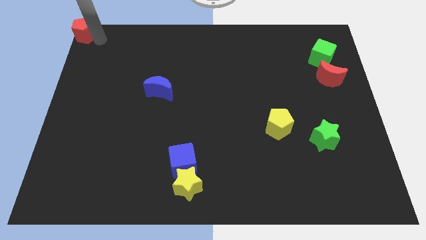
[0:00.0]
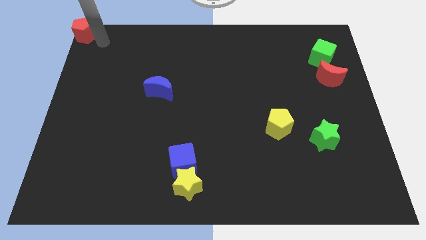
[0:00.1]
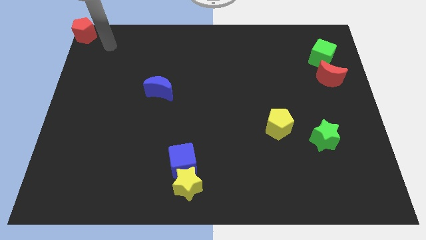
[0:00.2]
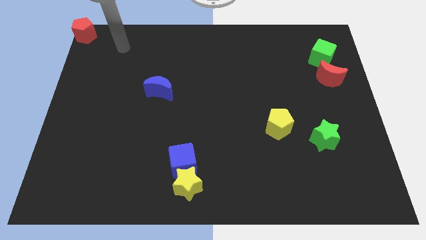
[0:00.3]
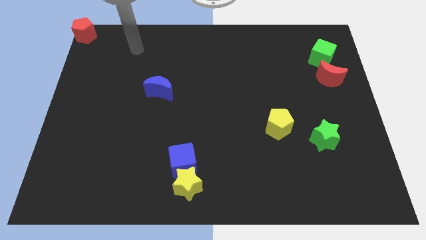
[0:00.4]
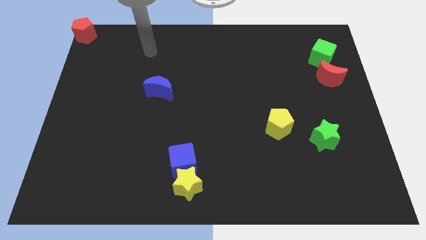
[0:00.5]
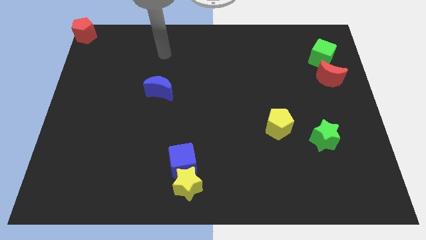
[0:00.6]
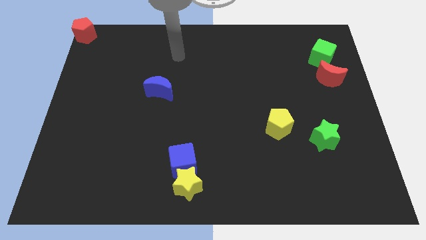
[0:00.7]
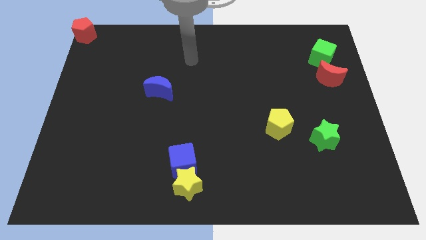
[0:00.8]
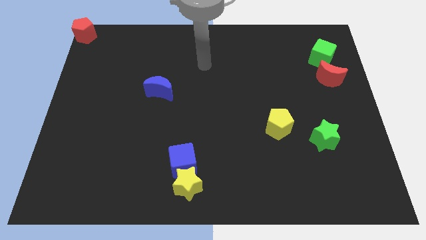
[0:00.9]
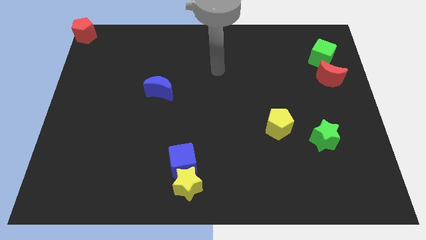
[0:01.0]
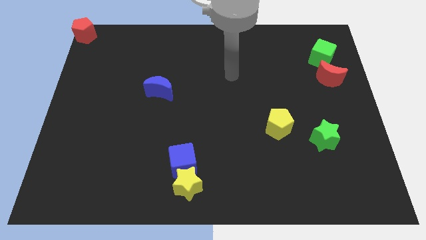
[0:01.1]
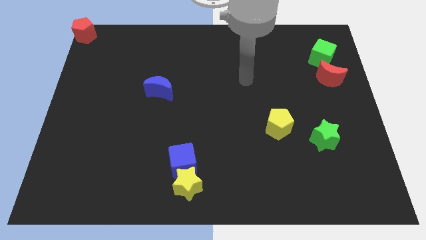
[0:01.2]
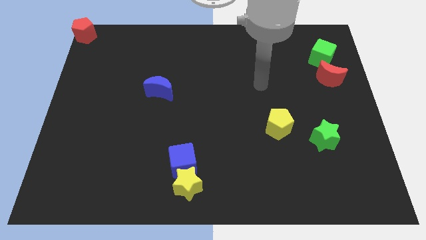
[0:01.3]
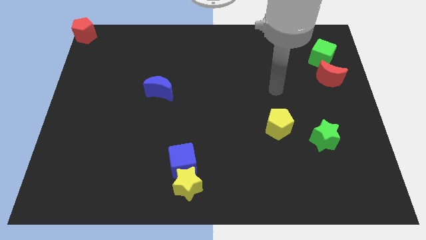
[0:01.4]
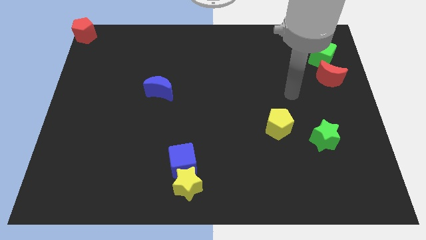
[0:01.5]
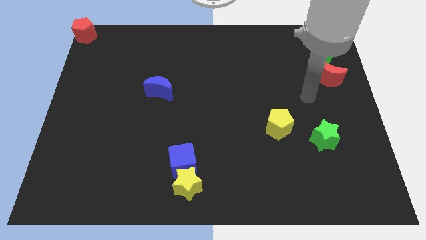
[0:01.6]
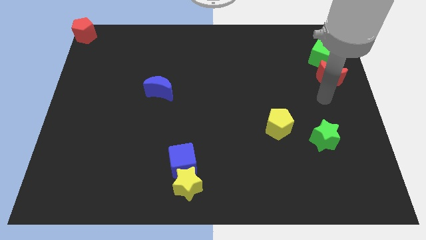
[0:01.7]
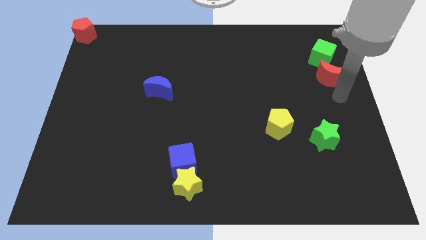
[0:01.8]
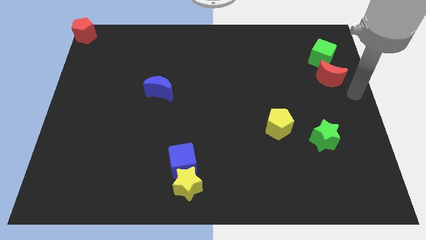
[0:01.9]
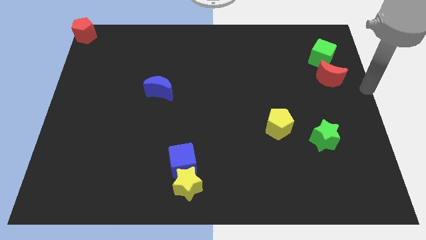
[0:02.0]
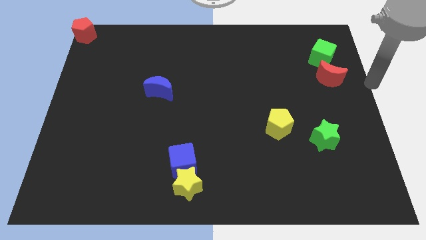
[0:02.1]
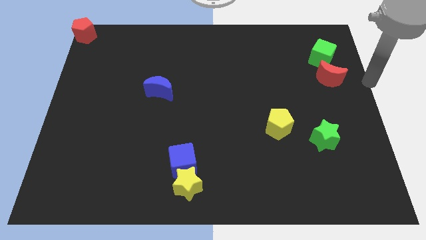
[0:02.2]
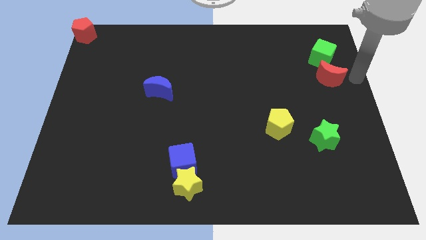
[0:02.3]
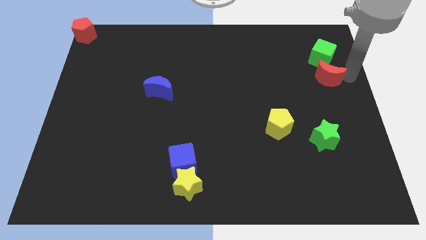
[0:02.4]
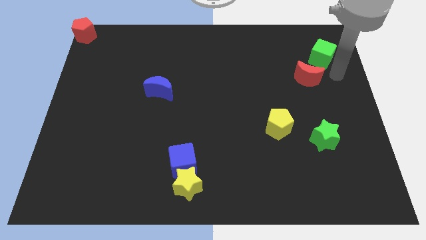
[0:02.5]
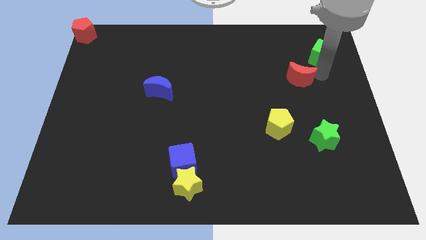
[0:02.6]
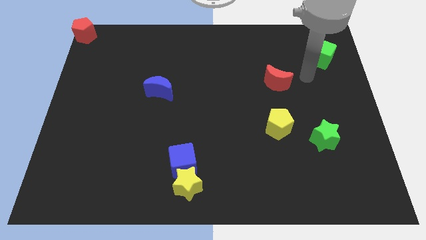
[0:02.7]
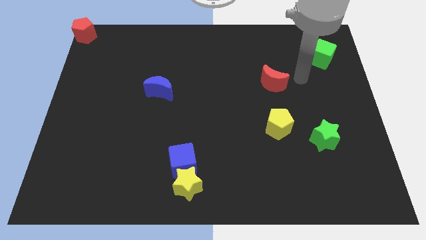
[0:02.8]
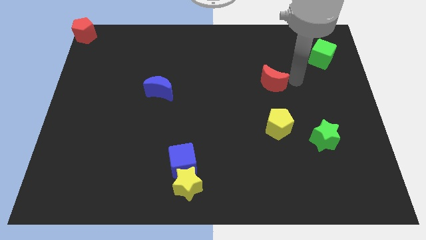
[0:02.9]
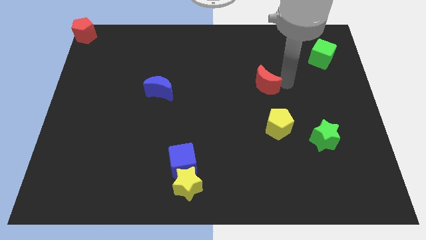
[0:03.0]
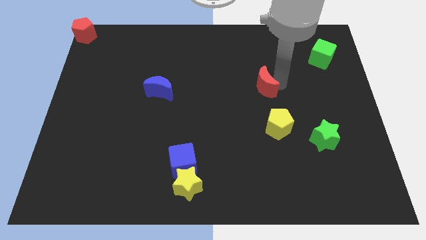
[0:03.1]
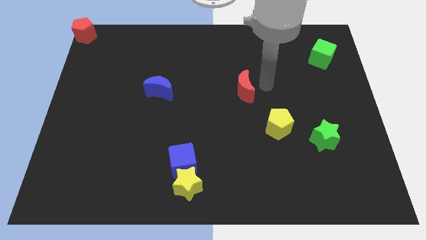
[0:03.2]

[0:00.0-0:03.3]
place the red moon above the yellow pentagon

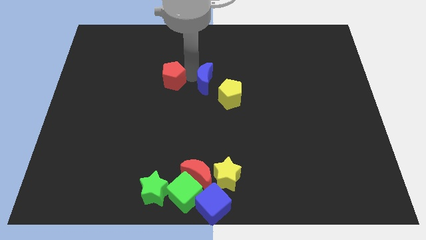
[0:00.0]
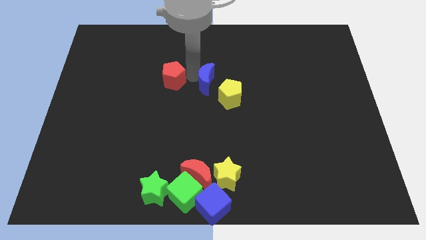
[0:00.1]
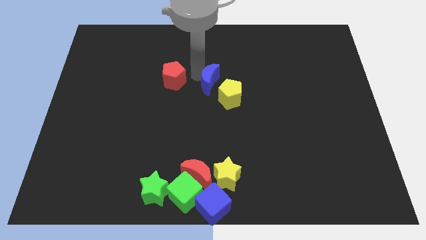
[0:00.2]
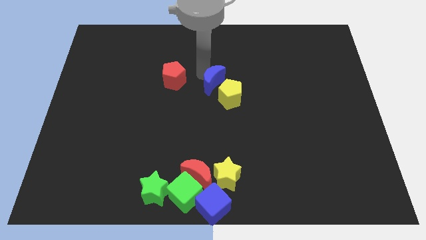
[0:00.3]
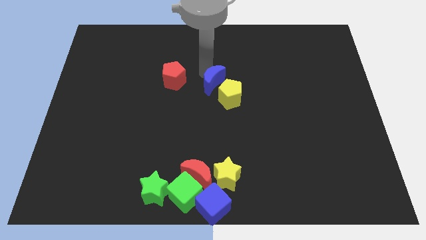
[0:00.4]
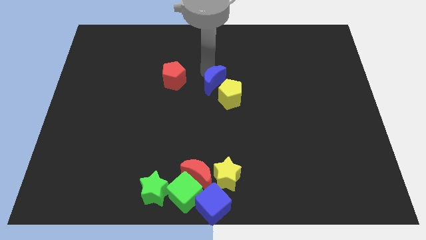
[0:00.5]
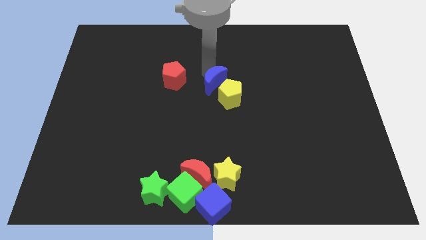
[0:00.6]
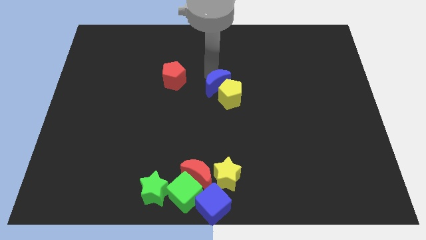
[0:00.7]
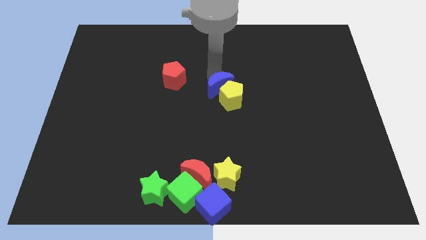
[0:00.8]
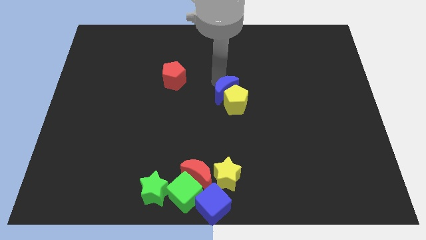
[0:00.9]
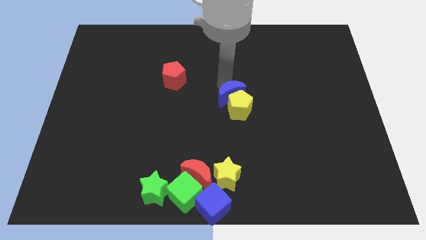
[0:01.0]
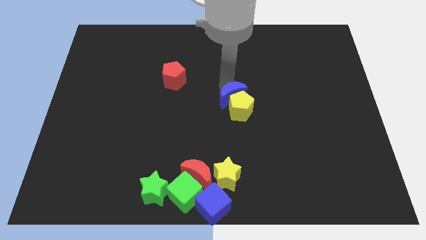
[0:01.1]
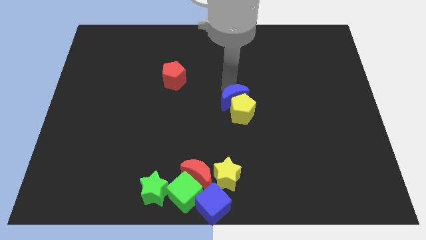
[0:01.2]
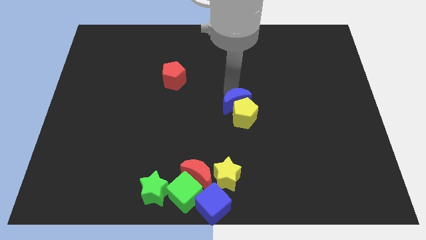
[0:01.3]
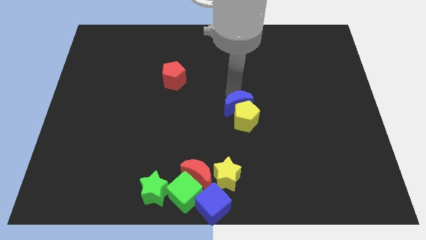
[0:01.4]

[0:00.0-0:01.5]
push the blue crescent along with yellow pentyagon to the center of the board

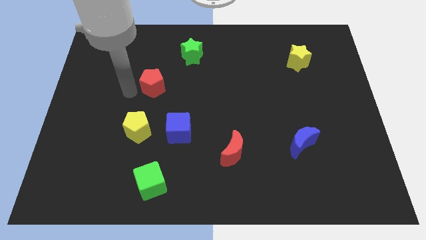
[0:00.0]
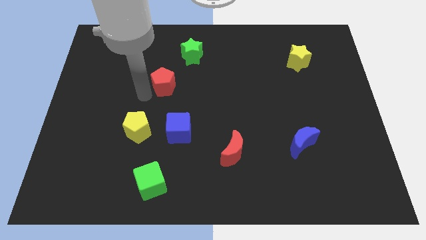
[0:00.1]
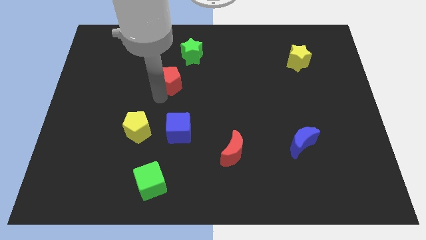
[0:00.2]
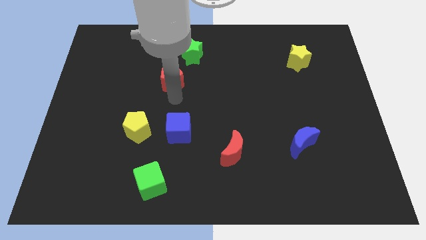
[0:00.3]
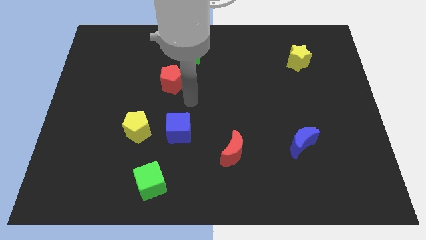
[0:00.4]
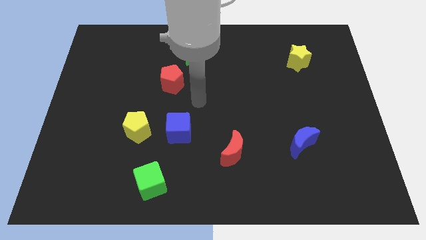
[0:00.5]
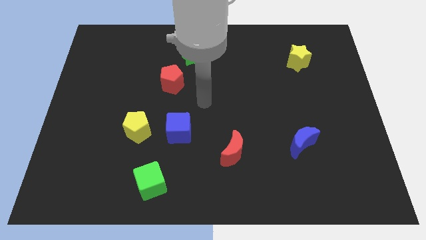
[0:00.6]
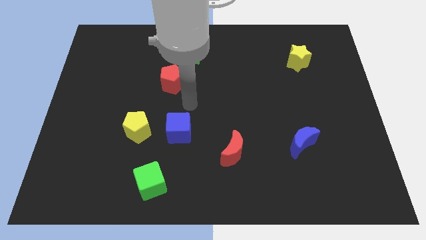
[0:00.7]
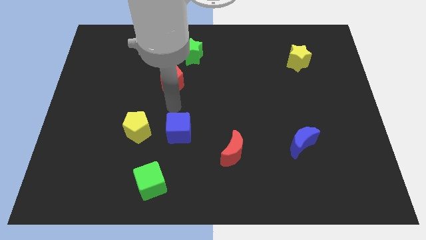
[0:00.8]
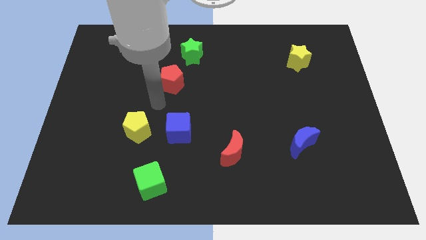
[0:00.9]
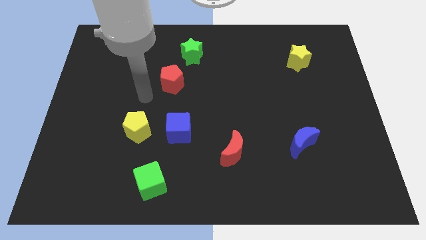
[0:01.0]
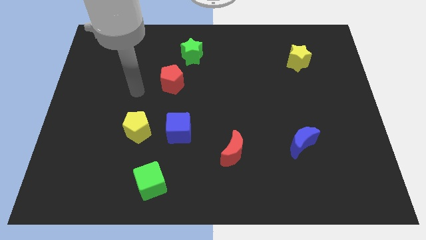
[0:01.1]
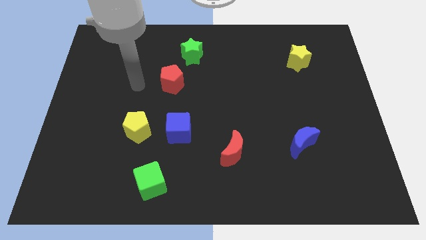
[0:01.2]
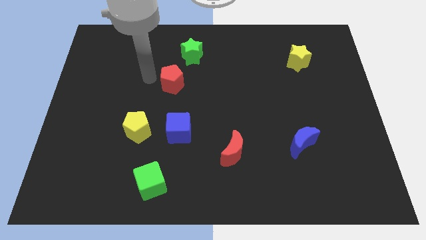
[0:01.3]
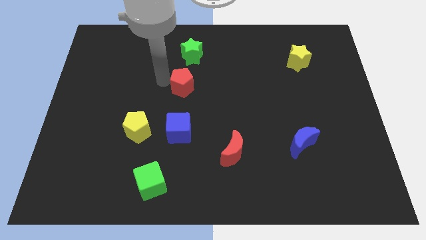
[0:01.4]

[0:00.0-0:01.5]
push the red pentagon to the bottom of the green star

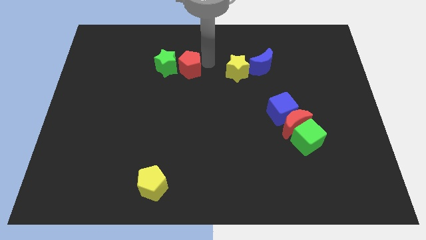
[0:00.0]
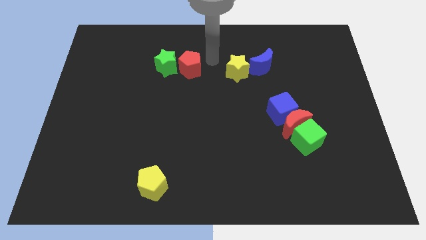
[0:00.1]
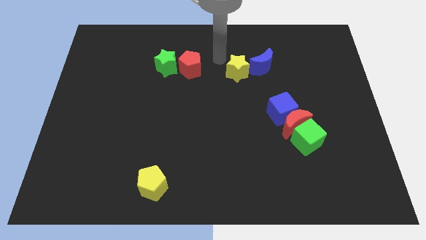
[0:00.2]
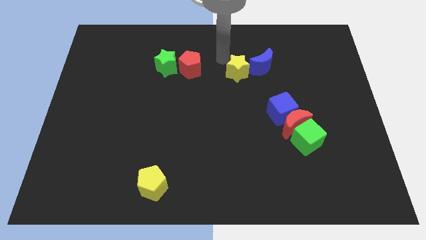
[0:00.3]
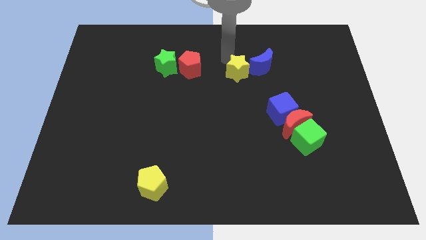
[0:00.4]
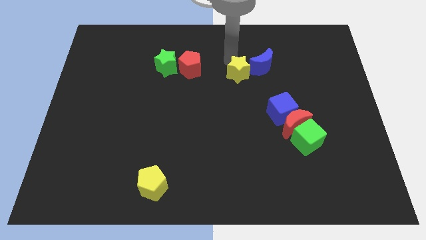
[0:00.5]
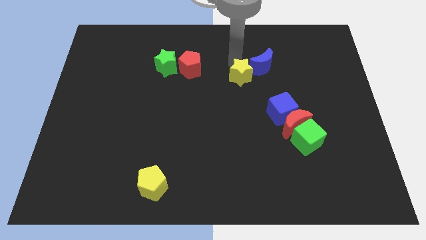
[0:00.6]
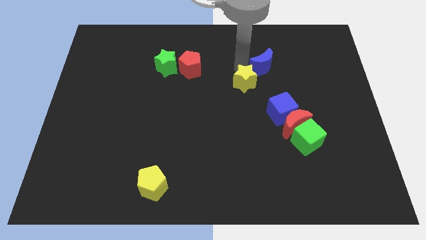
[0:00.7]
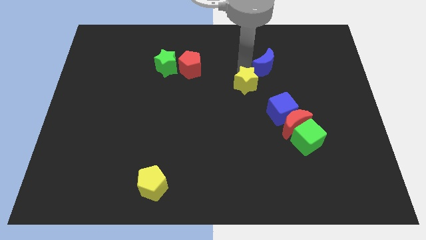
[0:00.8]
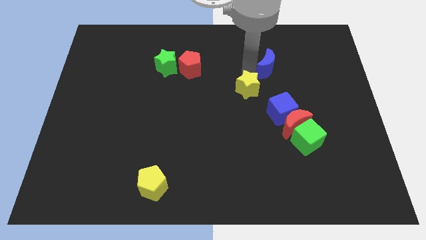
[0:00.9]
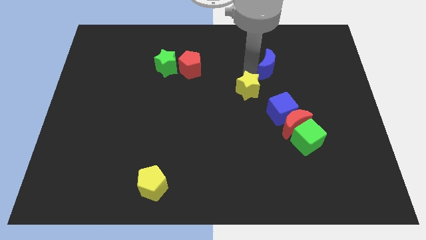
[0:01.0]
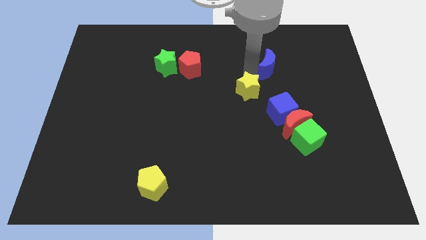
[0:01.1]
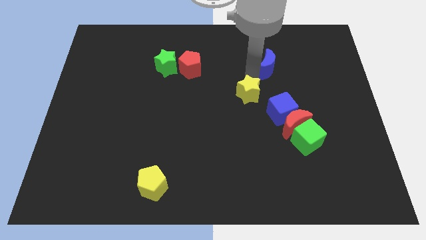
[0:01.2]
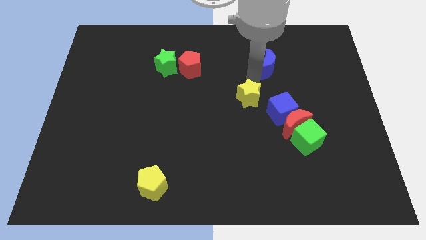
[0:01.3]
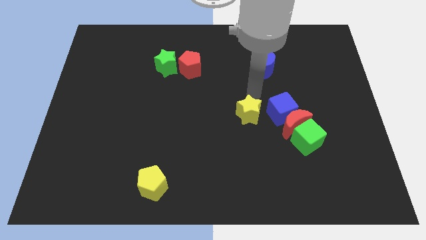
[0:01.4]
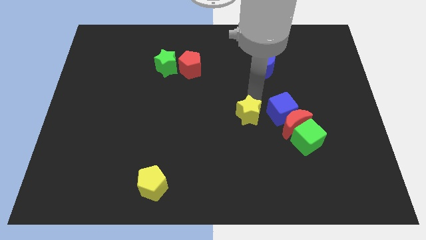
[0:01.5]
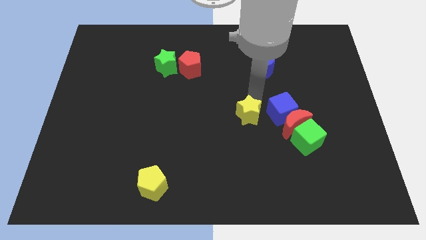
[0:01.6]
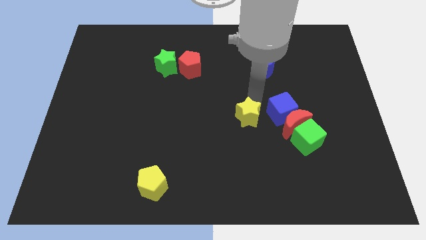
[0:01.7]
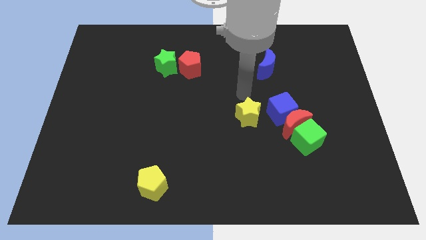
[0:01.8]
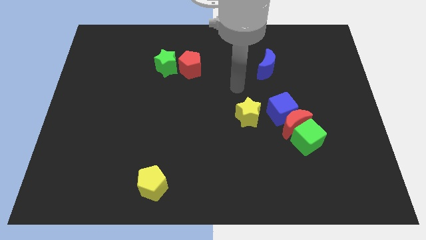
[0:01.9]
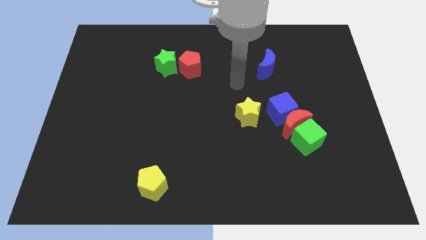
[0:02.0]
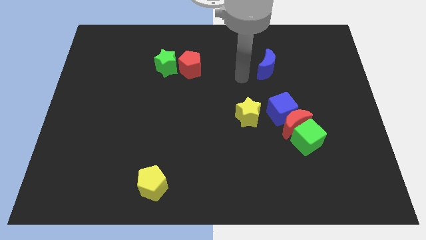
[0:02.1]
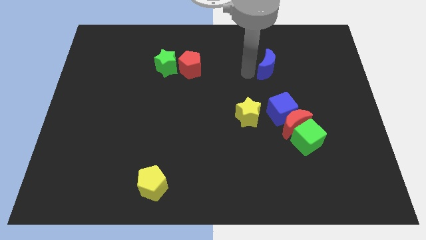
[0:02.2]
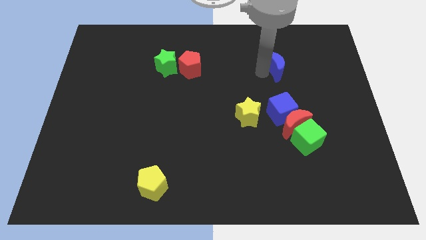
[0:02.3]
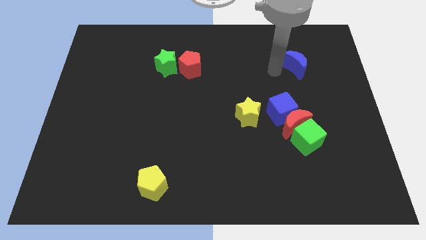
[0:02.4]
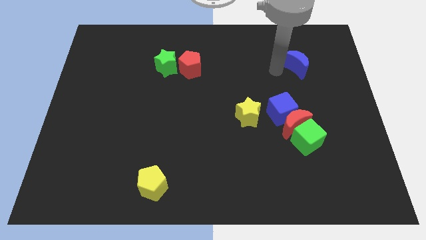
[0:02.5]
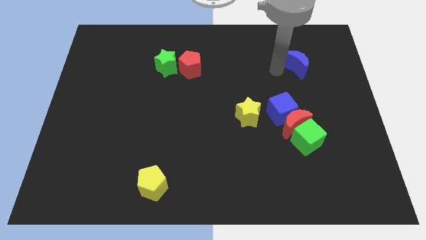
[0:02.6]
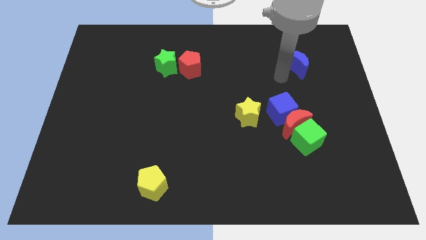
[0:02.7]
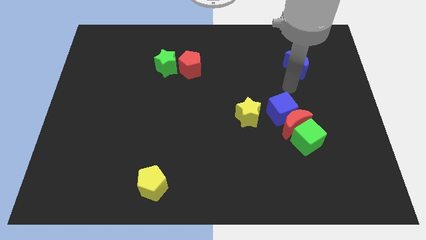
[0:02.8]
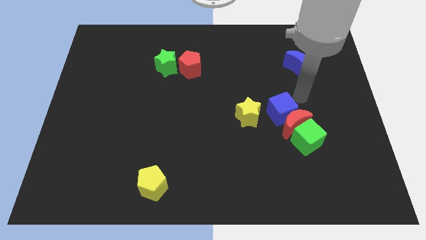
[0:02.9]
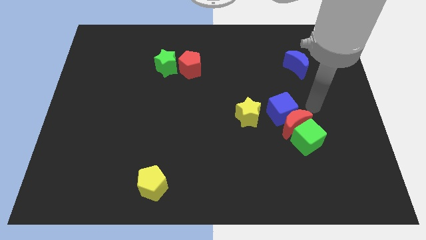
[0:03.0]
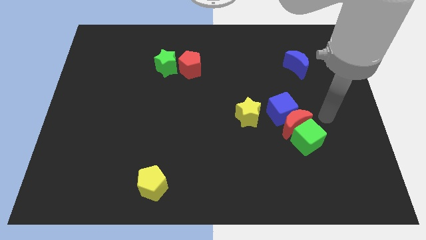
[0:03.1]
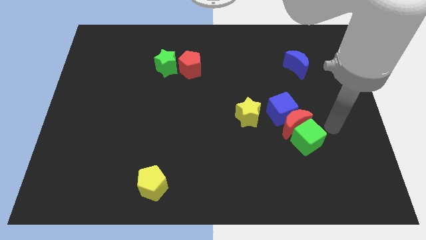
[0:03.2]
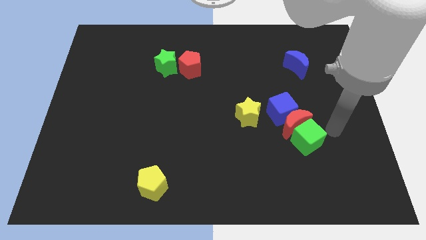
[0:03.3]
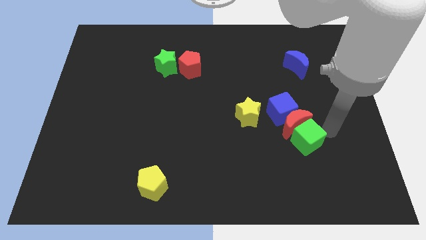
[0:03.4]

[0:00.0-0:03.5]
separate the yellow star and the blue crescent
